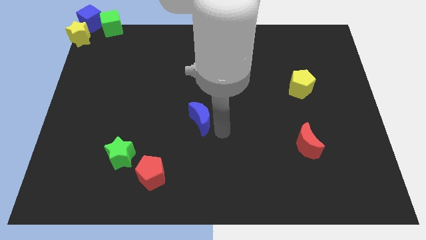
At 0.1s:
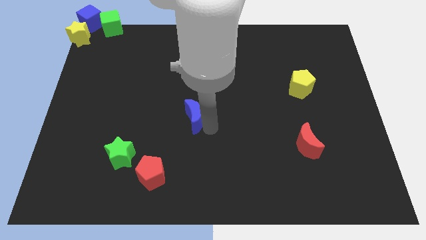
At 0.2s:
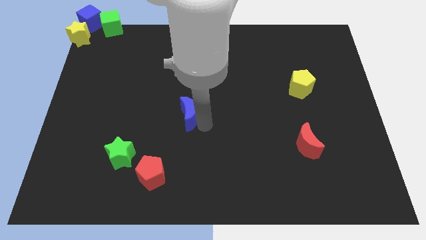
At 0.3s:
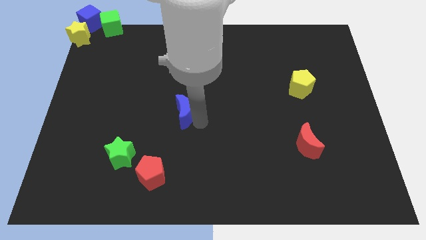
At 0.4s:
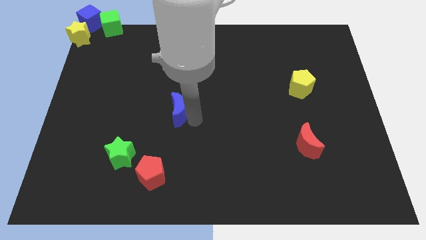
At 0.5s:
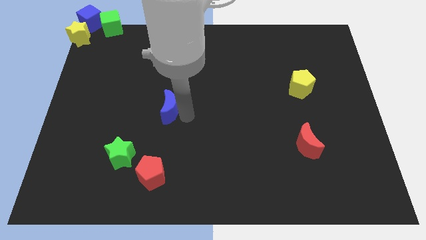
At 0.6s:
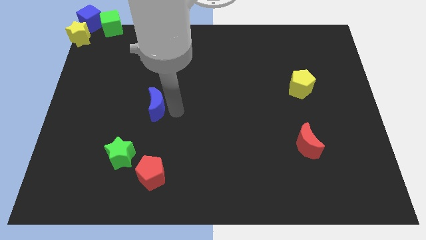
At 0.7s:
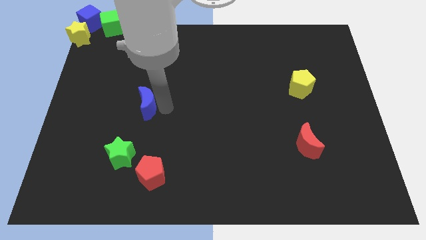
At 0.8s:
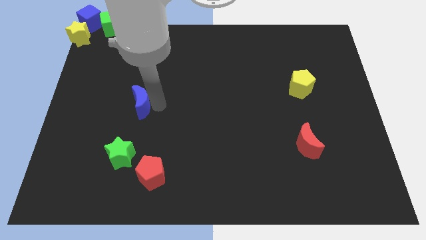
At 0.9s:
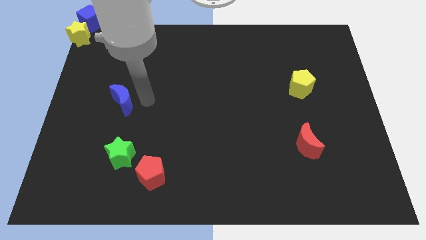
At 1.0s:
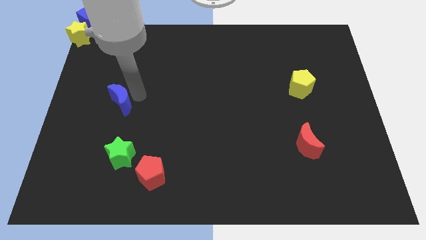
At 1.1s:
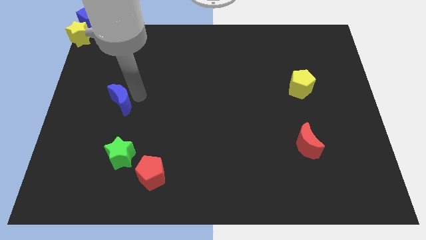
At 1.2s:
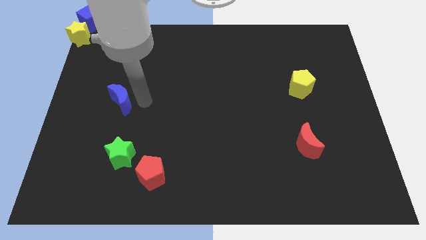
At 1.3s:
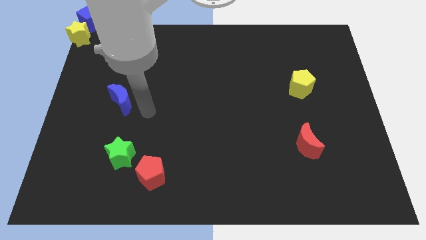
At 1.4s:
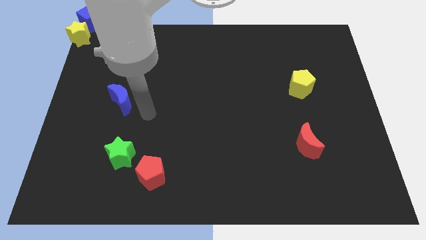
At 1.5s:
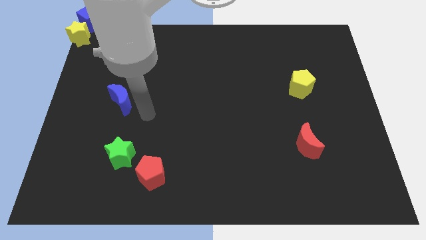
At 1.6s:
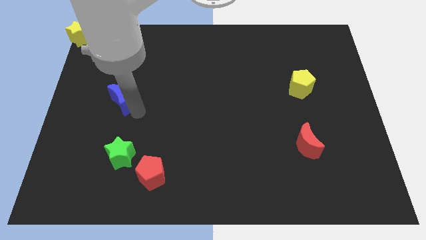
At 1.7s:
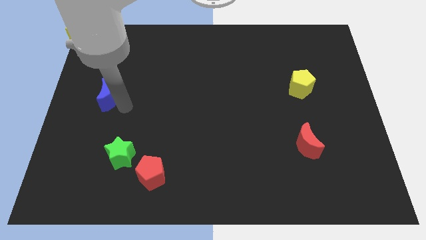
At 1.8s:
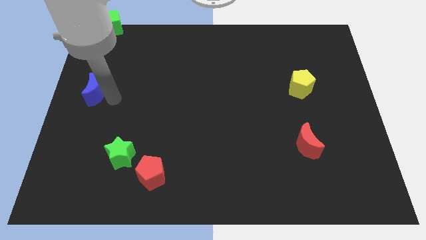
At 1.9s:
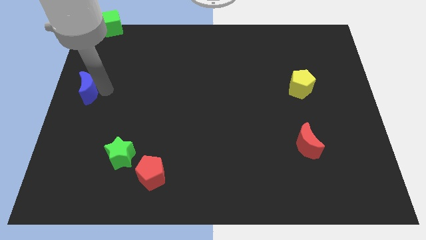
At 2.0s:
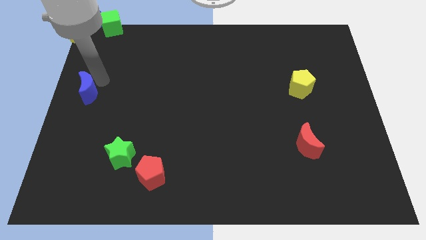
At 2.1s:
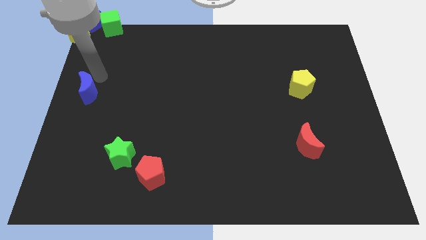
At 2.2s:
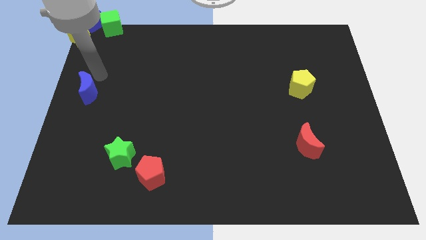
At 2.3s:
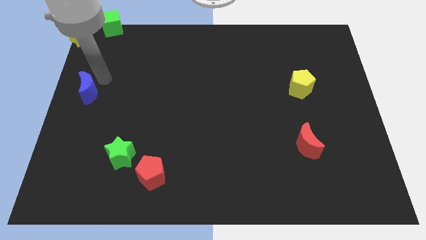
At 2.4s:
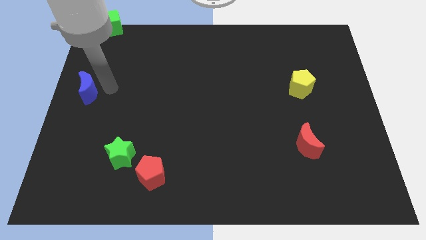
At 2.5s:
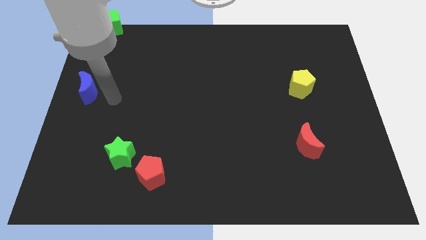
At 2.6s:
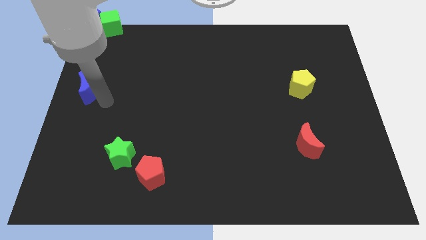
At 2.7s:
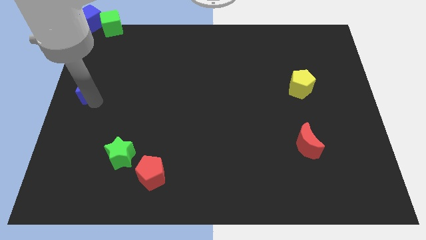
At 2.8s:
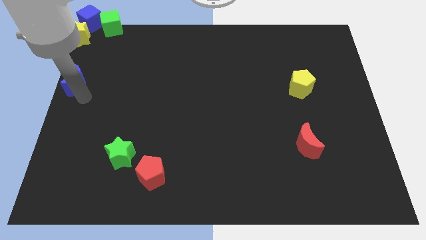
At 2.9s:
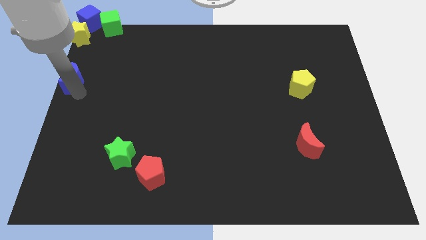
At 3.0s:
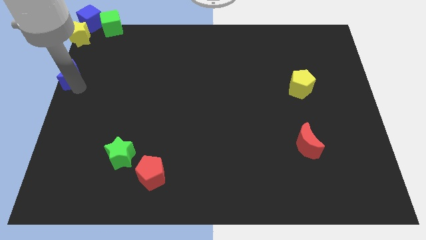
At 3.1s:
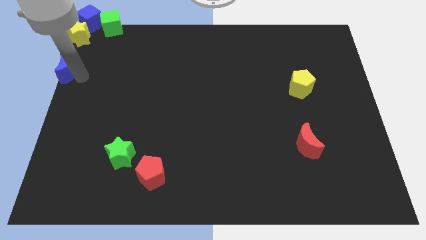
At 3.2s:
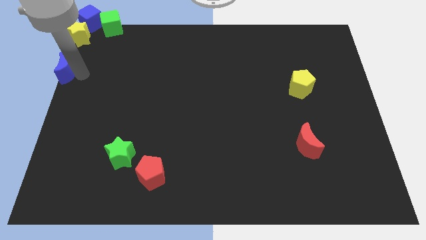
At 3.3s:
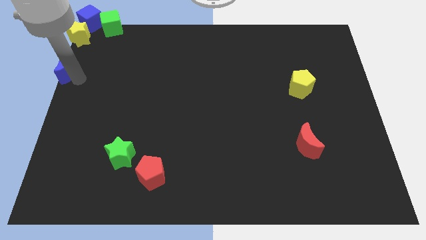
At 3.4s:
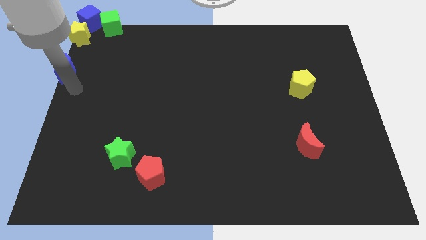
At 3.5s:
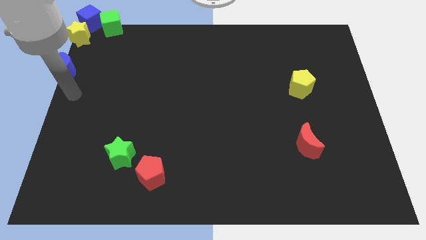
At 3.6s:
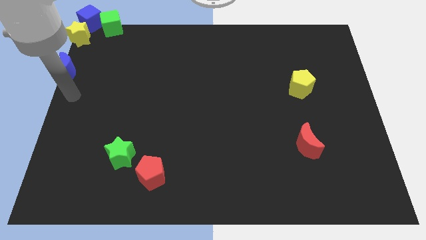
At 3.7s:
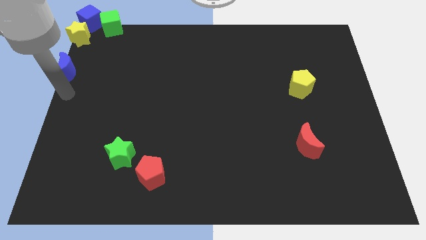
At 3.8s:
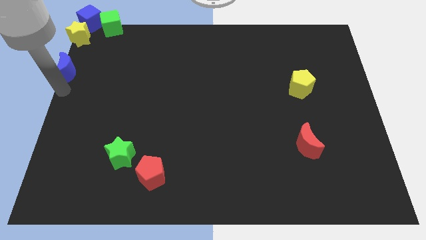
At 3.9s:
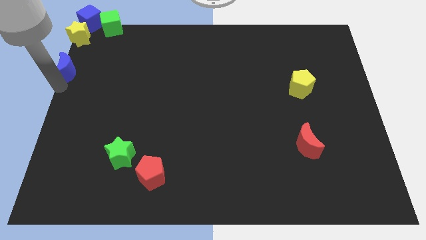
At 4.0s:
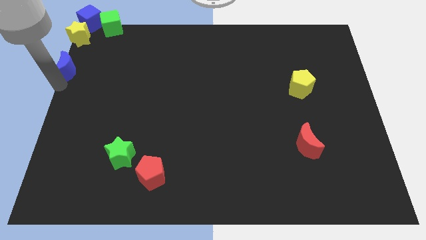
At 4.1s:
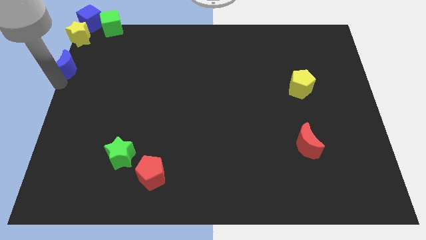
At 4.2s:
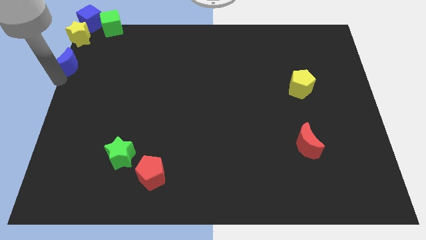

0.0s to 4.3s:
place the blue crescent below the yellow star to form a vertical line

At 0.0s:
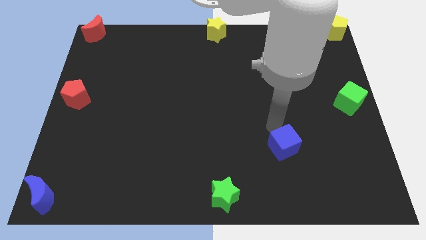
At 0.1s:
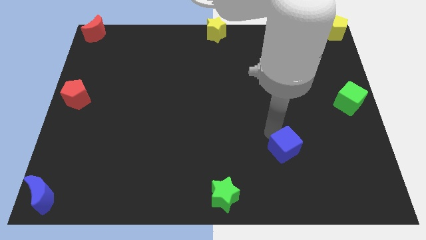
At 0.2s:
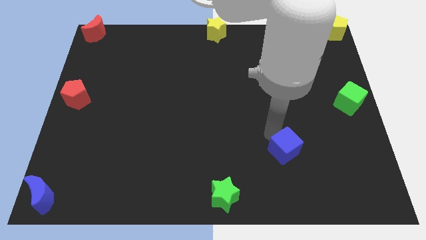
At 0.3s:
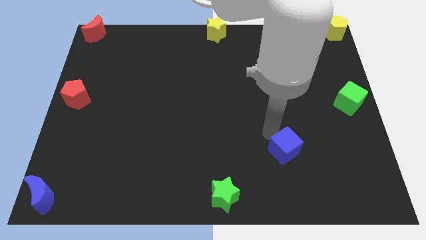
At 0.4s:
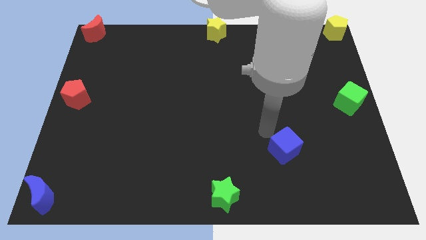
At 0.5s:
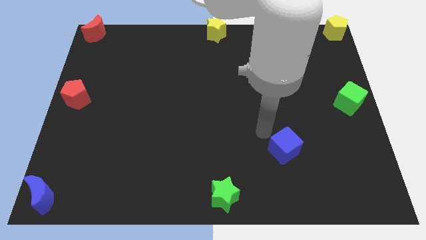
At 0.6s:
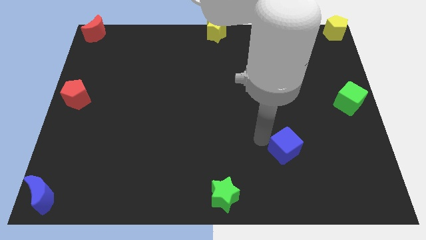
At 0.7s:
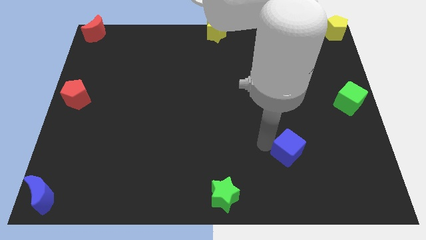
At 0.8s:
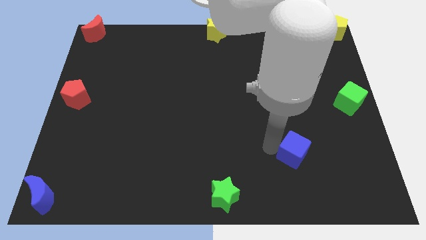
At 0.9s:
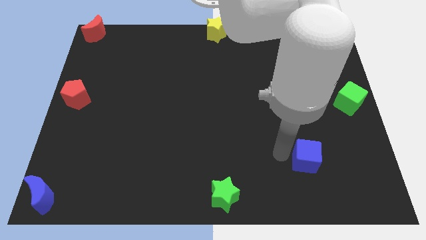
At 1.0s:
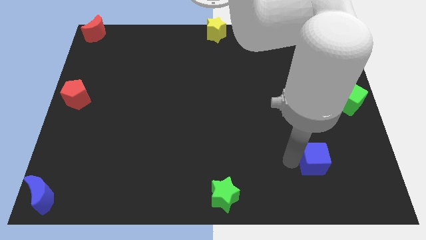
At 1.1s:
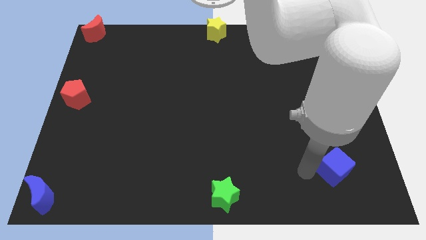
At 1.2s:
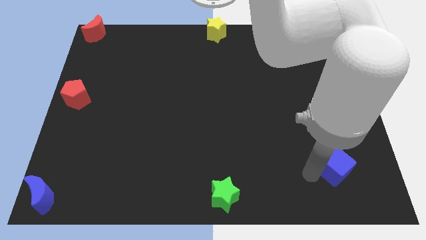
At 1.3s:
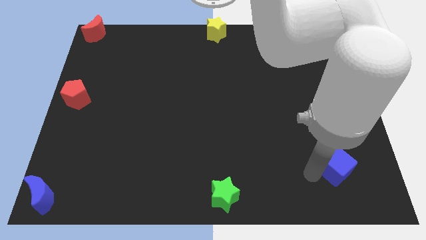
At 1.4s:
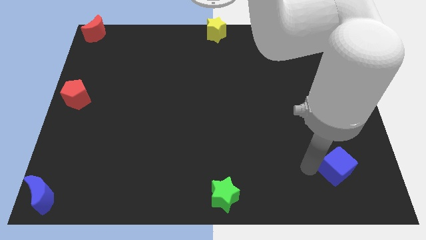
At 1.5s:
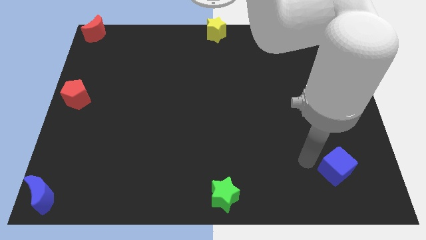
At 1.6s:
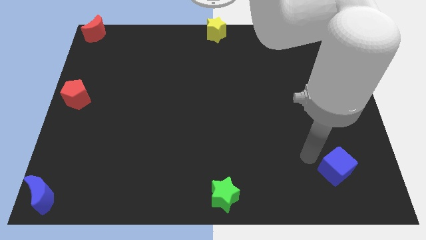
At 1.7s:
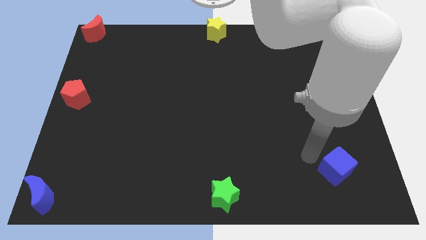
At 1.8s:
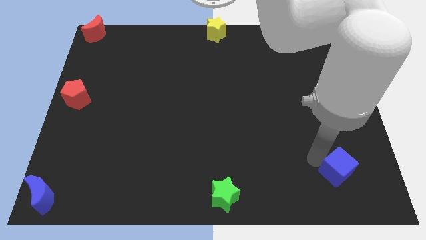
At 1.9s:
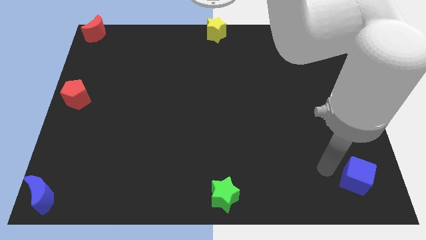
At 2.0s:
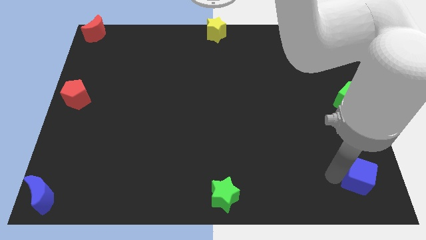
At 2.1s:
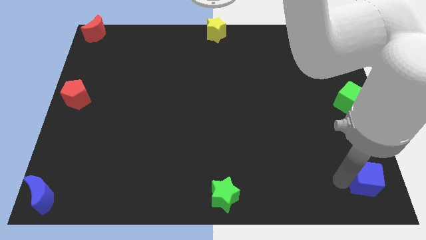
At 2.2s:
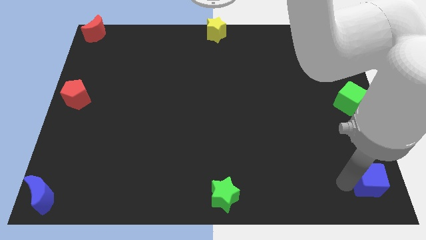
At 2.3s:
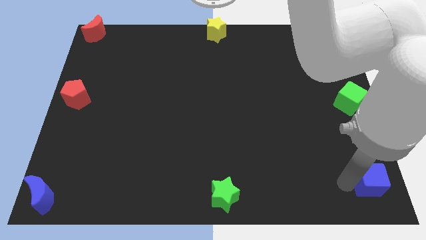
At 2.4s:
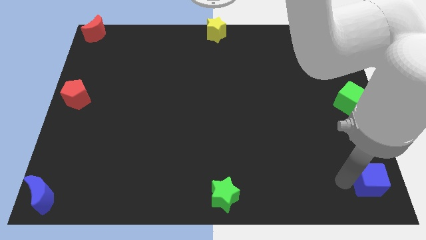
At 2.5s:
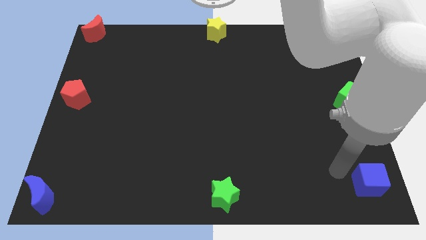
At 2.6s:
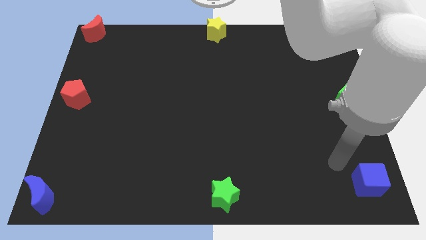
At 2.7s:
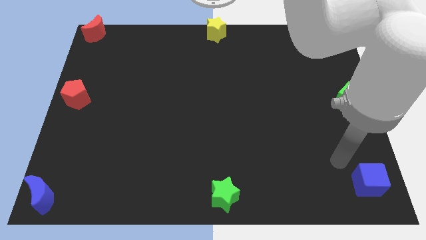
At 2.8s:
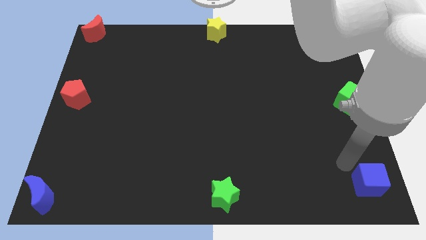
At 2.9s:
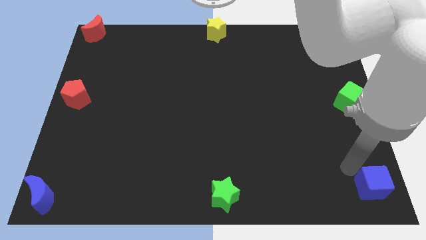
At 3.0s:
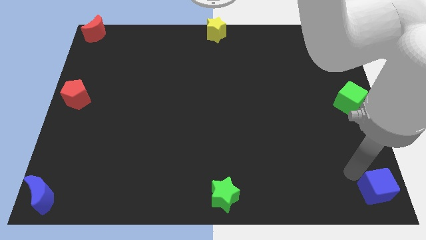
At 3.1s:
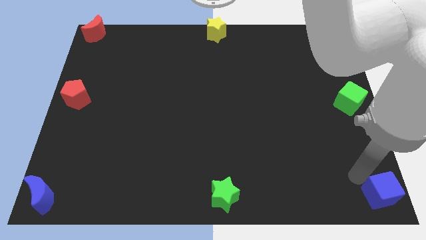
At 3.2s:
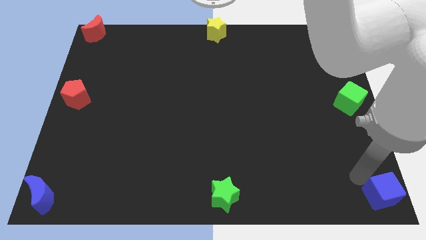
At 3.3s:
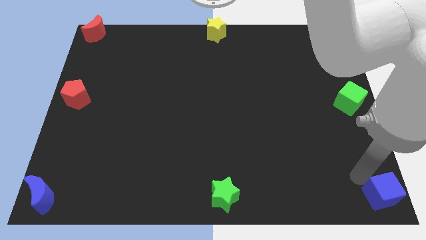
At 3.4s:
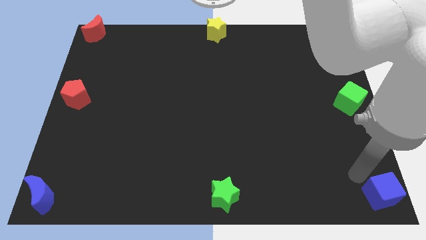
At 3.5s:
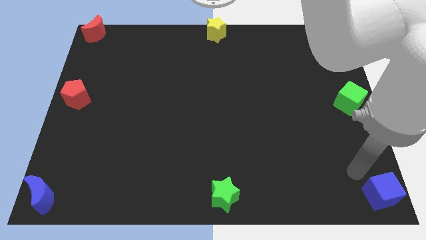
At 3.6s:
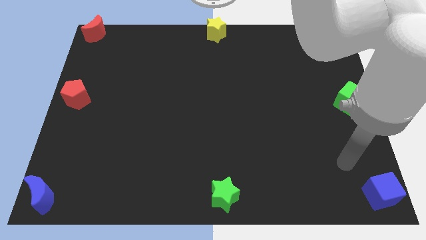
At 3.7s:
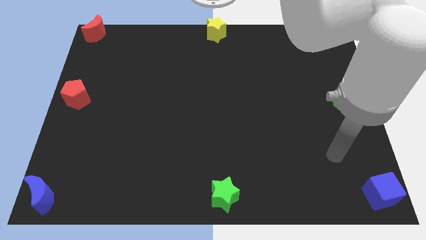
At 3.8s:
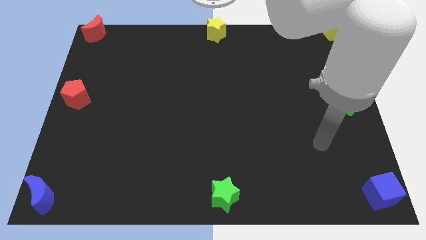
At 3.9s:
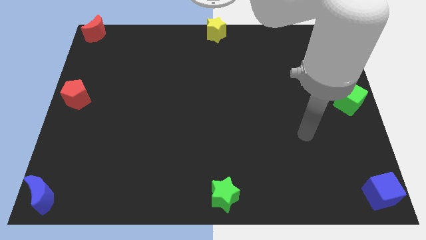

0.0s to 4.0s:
move the blue cube to the right bottom

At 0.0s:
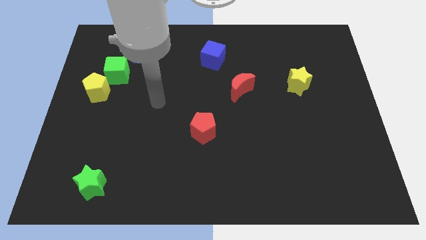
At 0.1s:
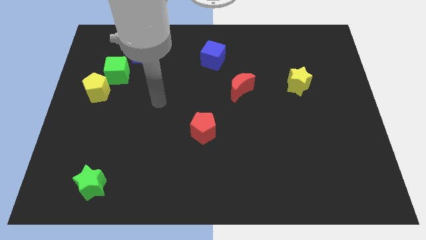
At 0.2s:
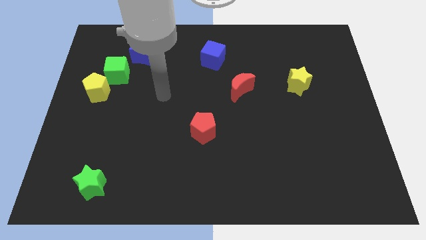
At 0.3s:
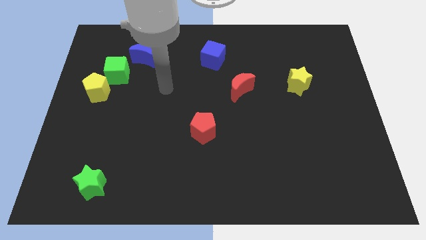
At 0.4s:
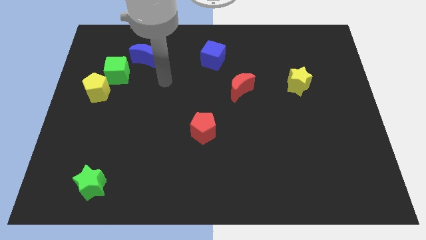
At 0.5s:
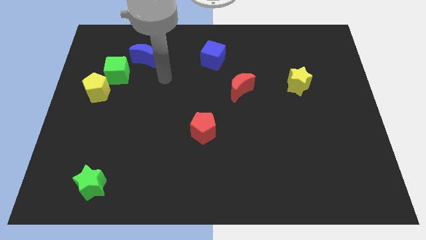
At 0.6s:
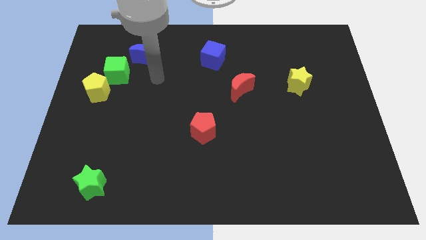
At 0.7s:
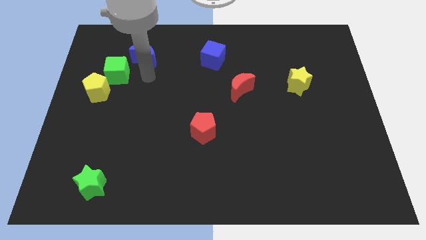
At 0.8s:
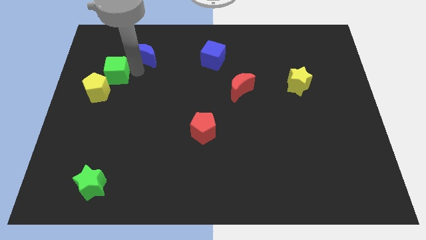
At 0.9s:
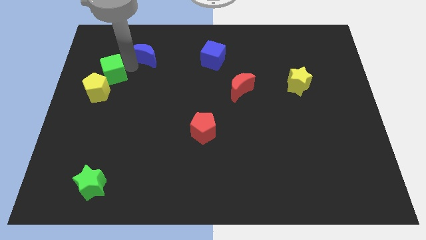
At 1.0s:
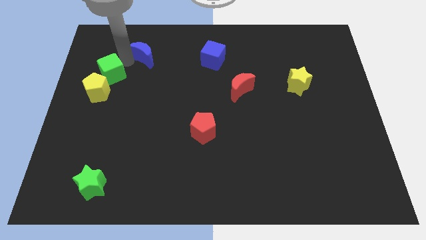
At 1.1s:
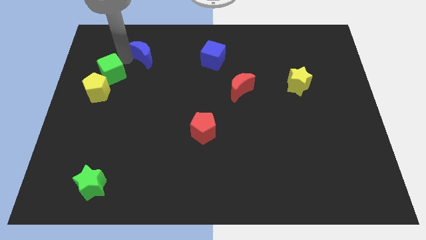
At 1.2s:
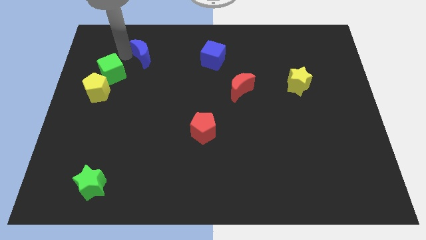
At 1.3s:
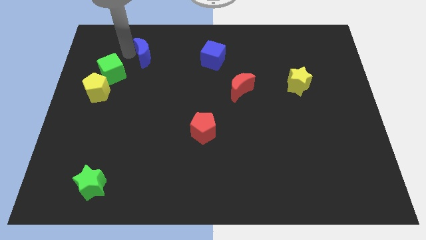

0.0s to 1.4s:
slide the blue moon to the right
